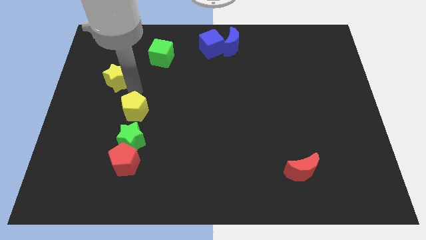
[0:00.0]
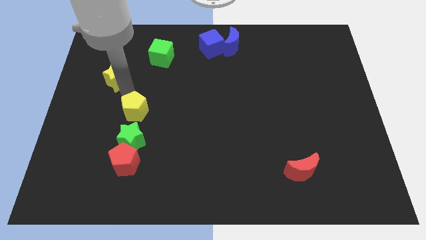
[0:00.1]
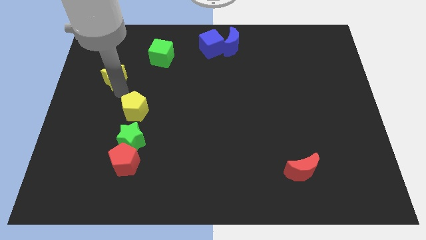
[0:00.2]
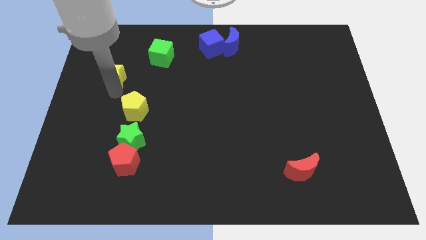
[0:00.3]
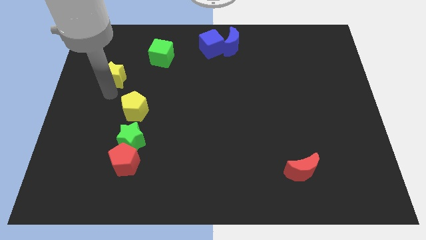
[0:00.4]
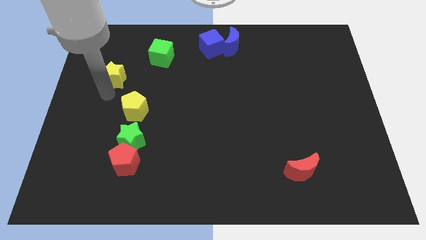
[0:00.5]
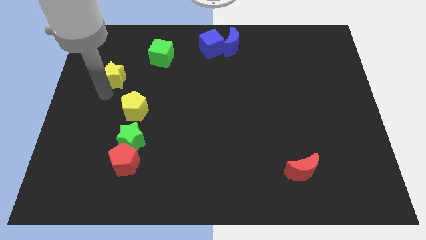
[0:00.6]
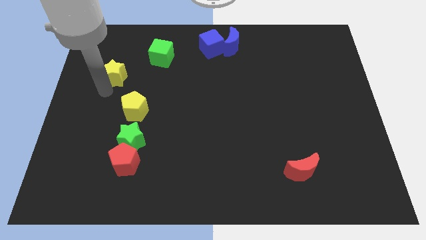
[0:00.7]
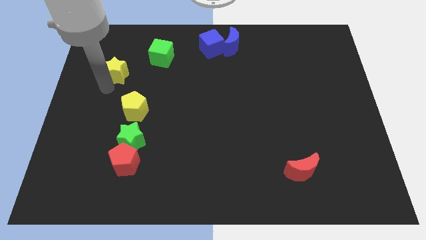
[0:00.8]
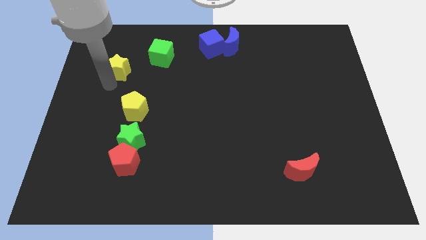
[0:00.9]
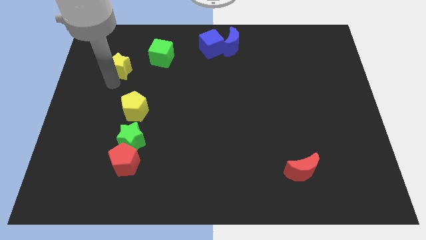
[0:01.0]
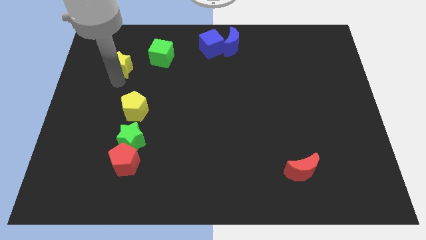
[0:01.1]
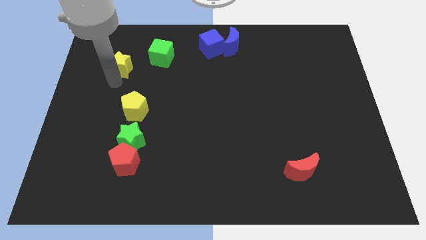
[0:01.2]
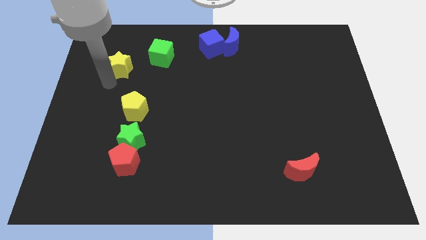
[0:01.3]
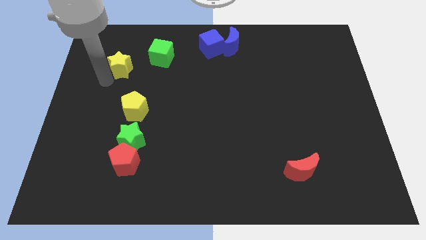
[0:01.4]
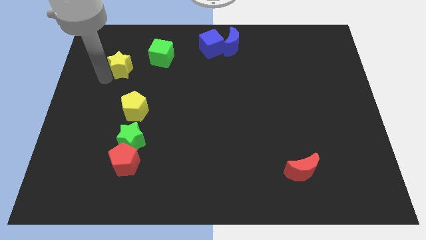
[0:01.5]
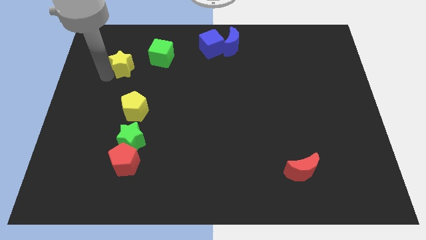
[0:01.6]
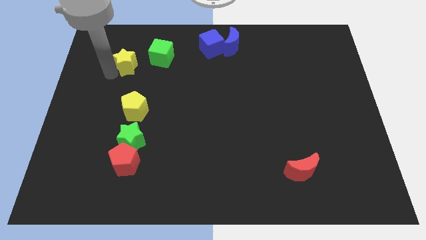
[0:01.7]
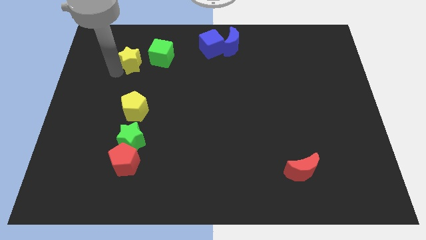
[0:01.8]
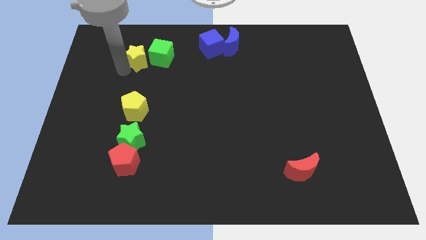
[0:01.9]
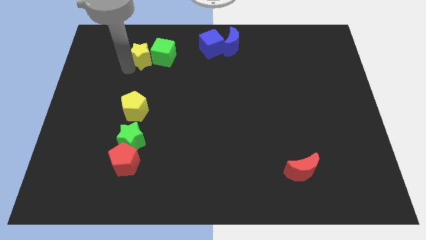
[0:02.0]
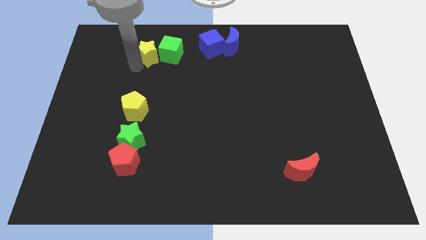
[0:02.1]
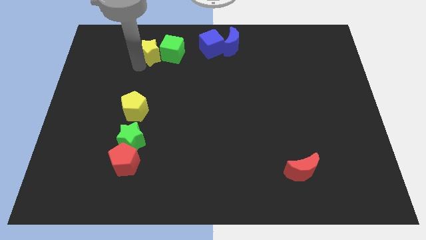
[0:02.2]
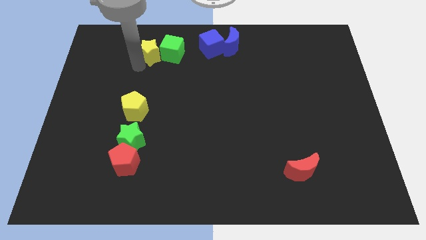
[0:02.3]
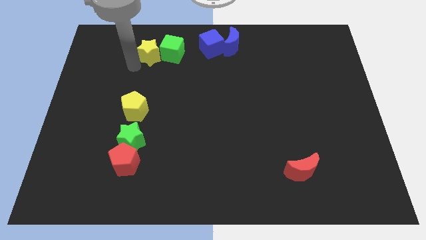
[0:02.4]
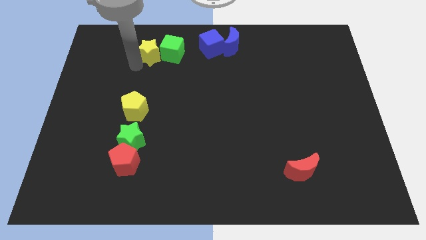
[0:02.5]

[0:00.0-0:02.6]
move yellow pentagon beside green cube

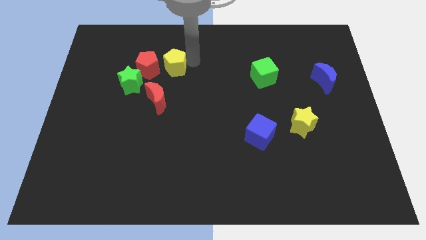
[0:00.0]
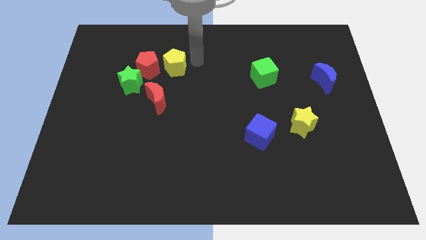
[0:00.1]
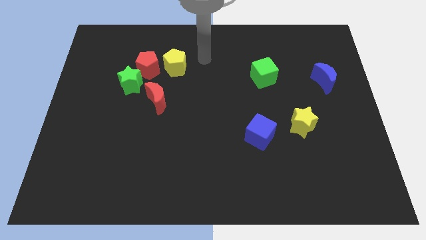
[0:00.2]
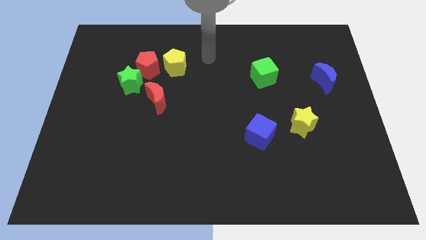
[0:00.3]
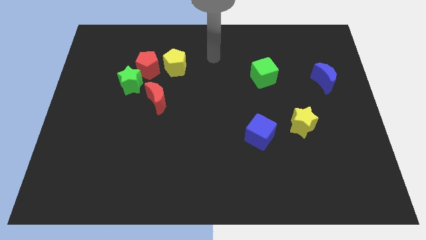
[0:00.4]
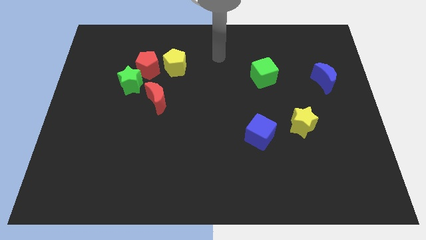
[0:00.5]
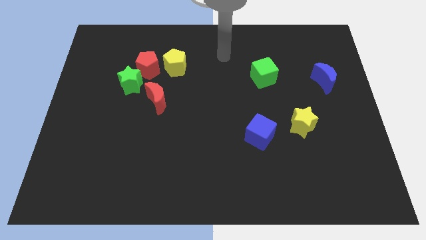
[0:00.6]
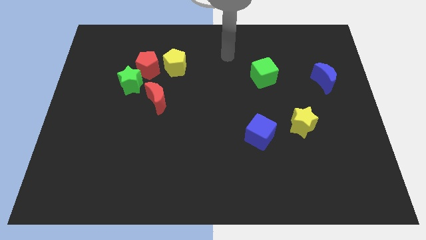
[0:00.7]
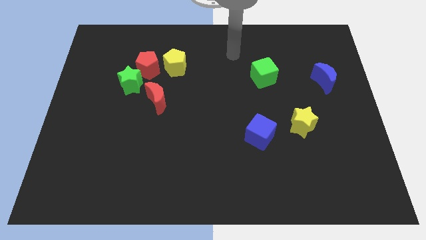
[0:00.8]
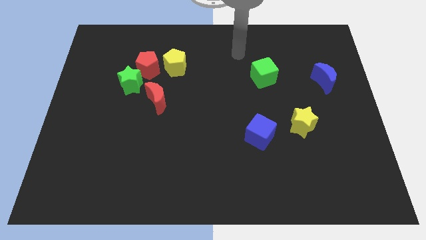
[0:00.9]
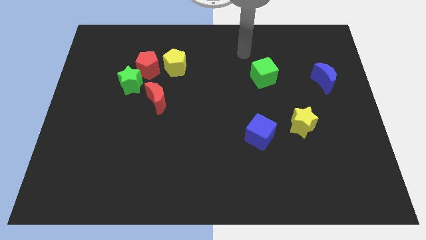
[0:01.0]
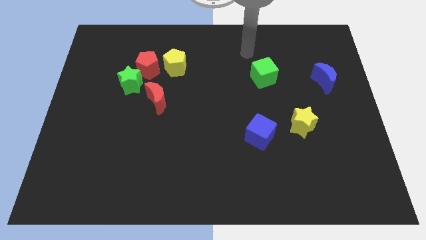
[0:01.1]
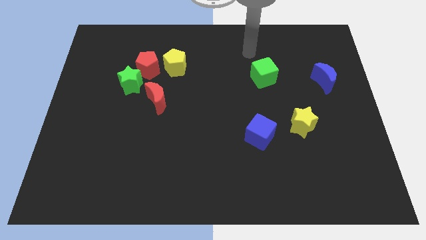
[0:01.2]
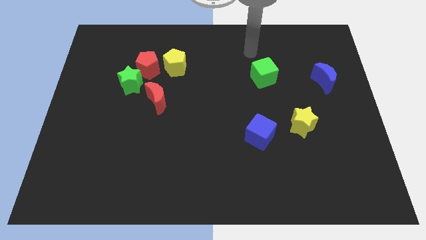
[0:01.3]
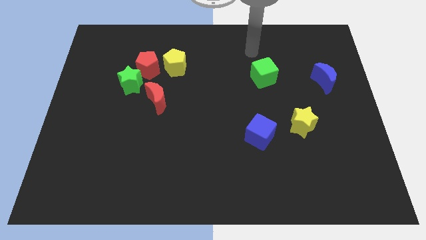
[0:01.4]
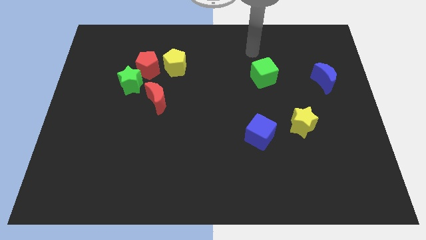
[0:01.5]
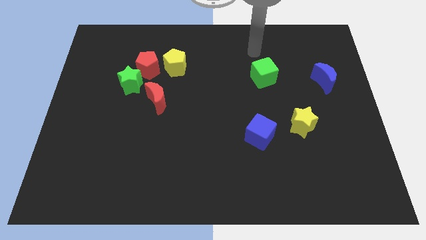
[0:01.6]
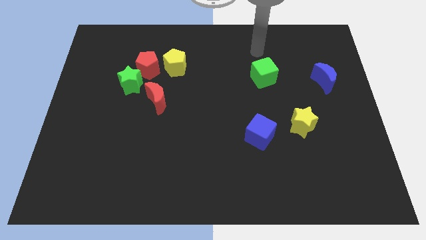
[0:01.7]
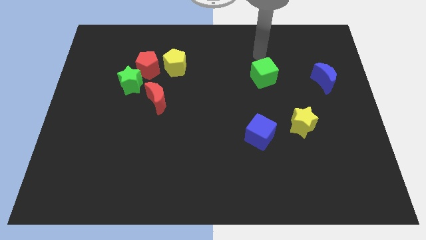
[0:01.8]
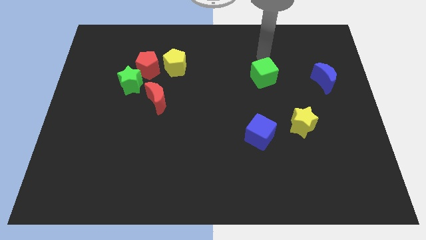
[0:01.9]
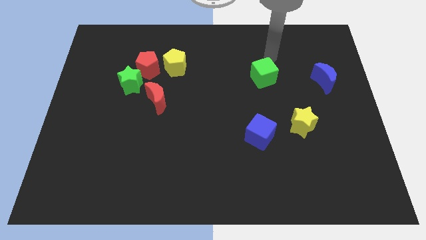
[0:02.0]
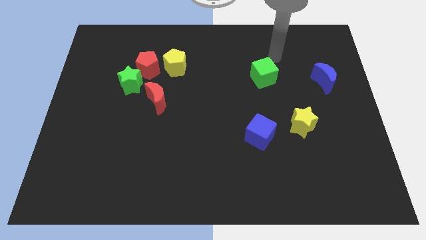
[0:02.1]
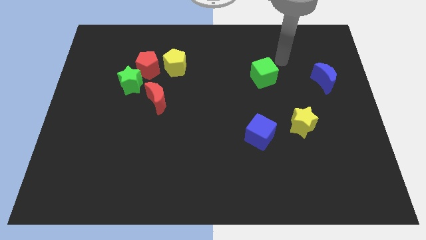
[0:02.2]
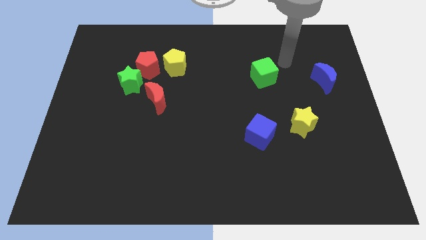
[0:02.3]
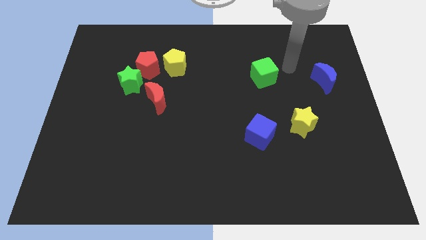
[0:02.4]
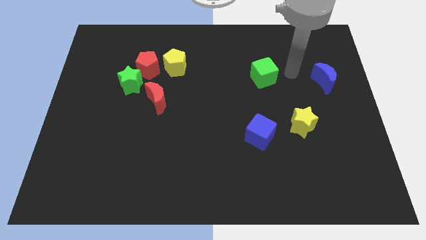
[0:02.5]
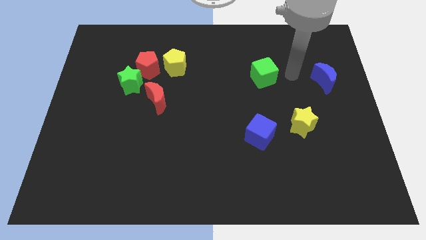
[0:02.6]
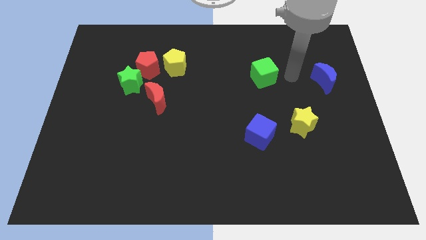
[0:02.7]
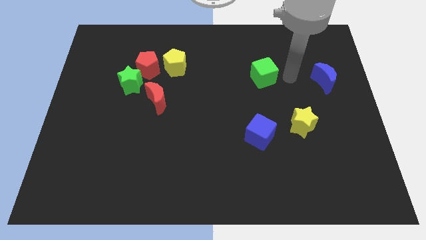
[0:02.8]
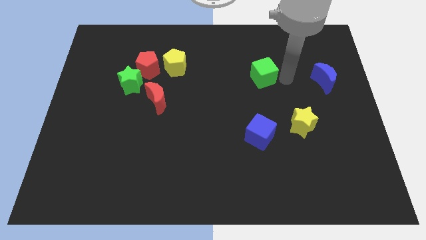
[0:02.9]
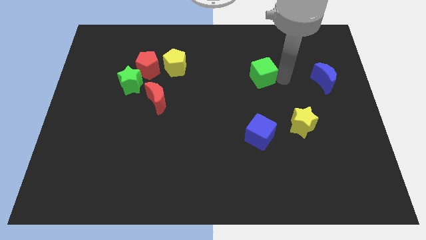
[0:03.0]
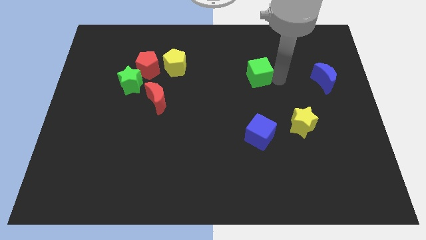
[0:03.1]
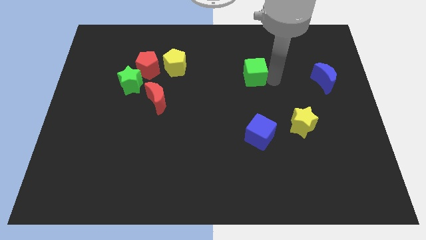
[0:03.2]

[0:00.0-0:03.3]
move your arm towards the green cube

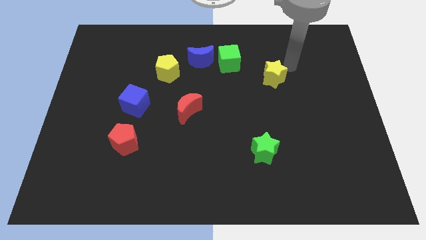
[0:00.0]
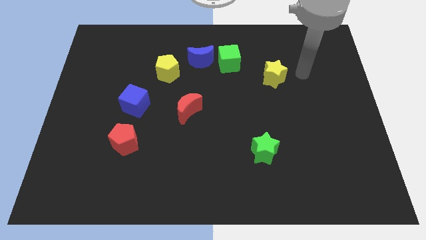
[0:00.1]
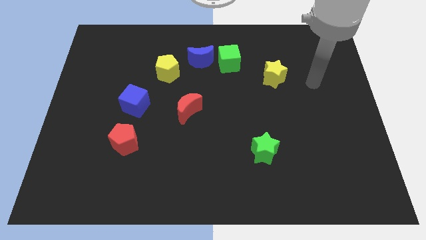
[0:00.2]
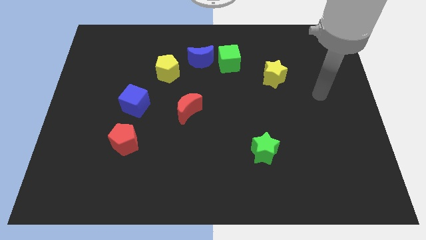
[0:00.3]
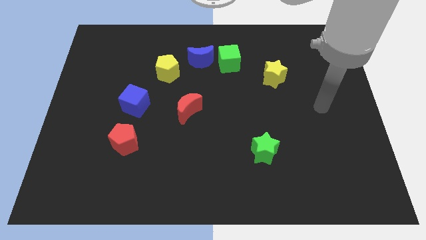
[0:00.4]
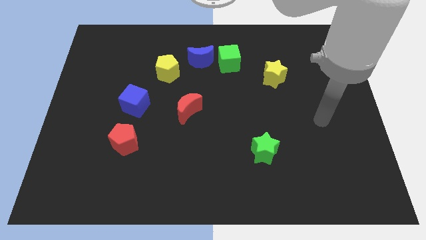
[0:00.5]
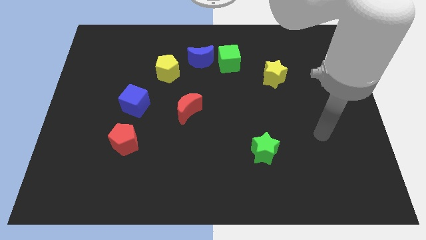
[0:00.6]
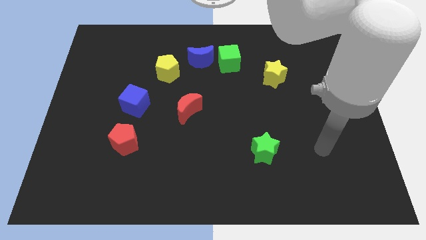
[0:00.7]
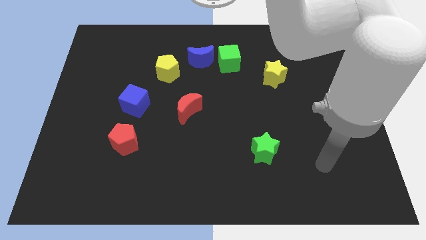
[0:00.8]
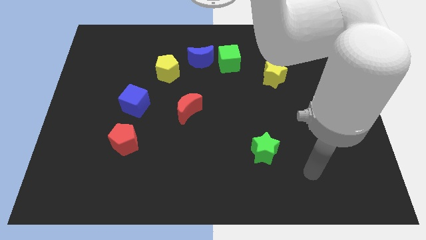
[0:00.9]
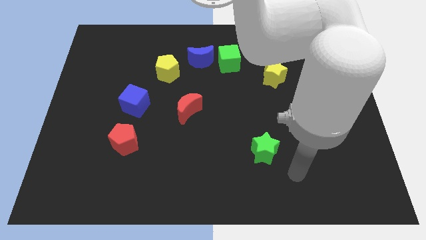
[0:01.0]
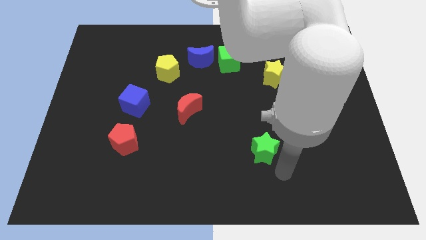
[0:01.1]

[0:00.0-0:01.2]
move your arm away from yellow star

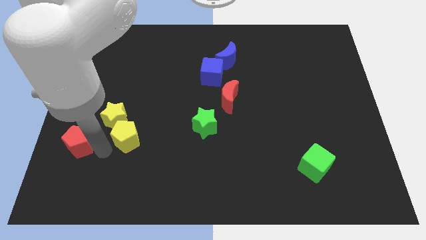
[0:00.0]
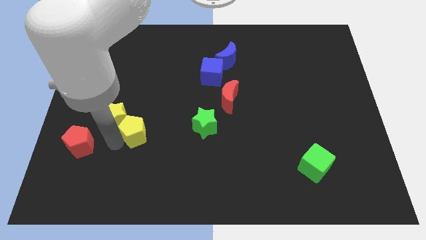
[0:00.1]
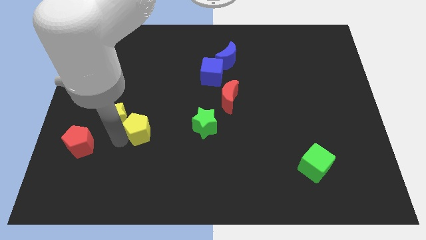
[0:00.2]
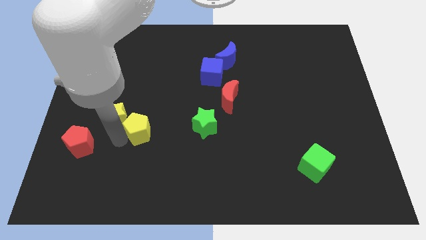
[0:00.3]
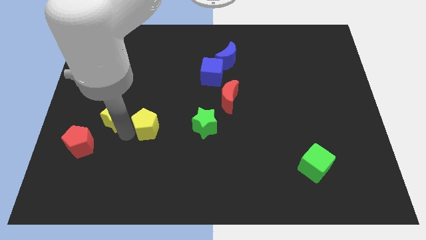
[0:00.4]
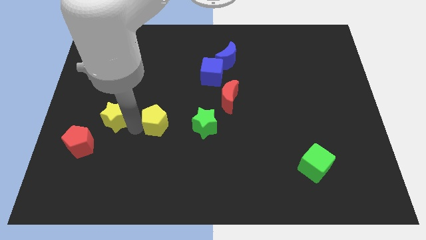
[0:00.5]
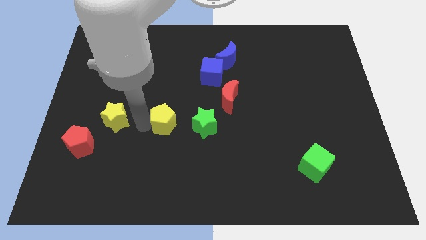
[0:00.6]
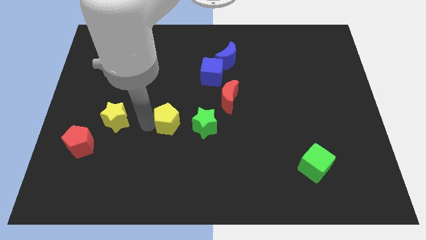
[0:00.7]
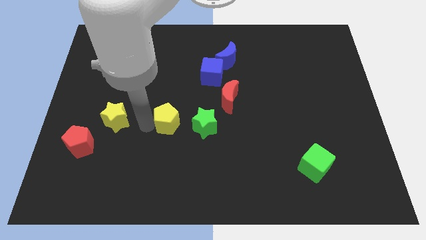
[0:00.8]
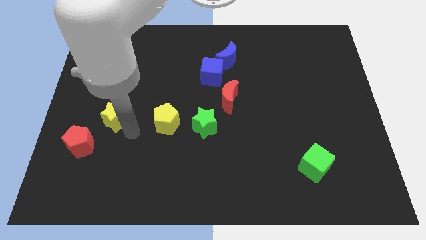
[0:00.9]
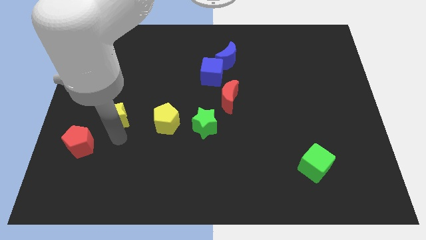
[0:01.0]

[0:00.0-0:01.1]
place the yellow pentagon in between the yellow star and the green star

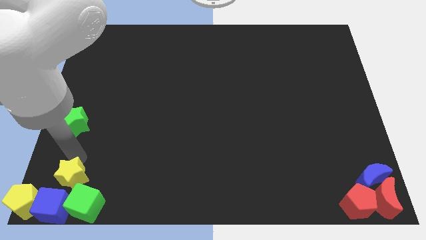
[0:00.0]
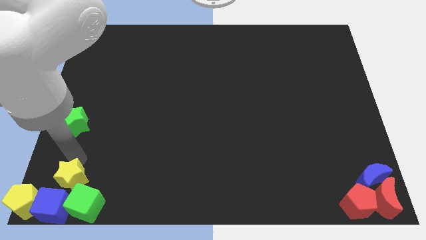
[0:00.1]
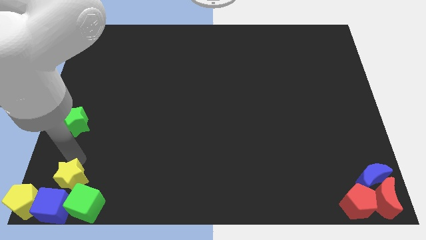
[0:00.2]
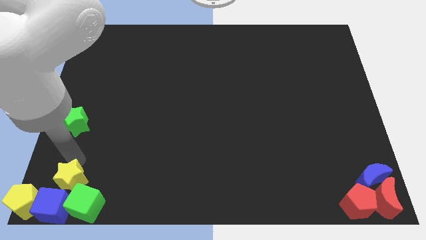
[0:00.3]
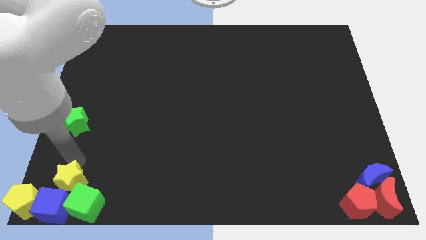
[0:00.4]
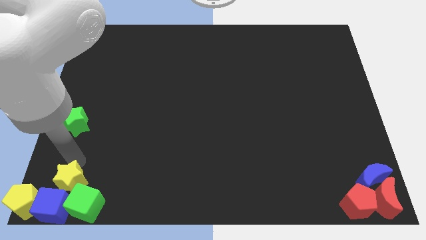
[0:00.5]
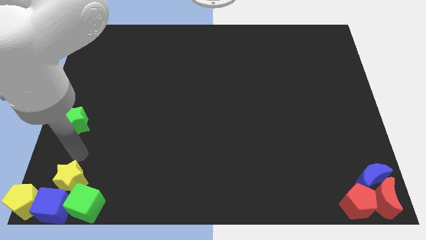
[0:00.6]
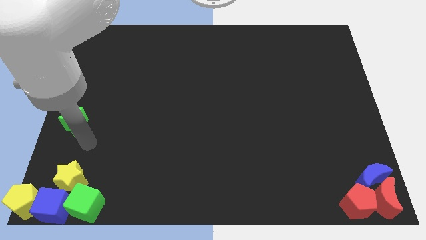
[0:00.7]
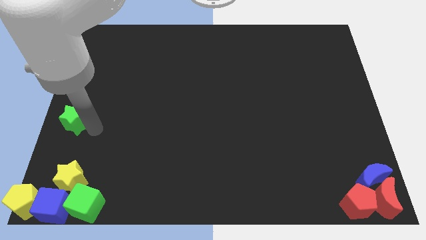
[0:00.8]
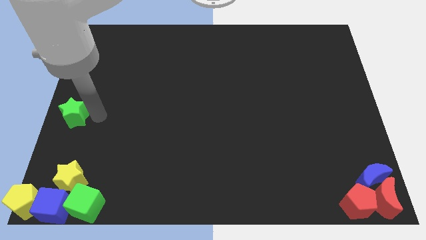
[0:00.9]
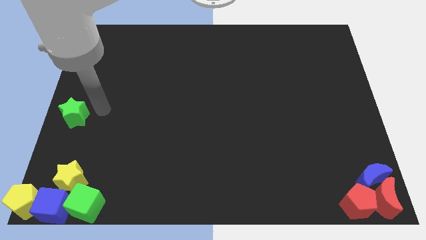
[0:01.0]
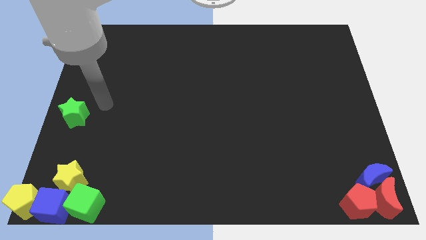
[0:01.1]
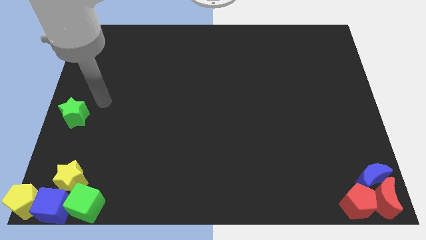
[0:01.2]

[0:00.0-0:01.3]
move the yellow star and green star bottom
